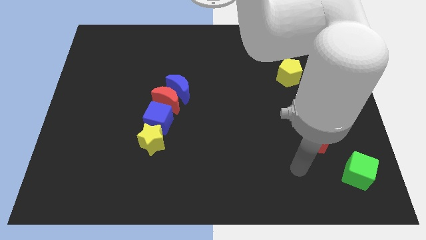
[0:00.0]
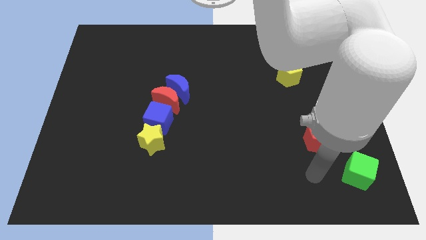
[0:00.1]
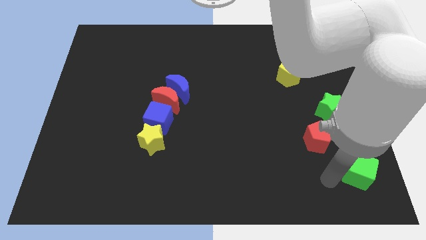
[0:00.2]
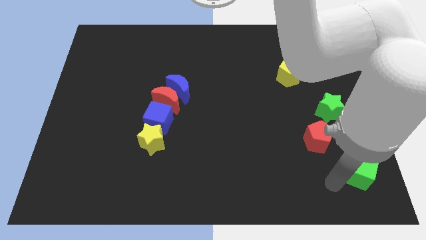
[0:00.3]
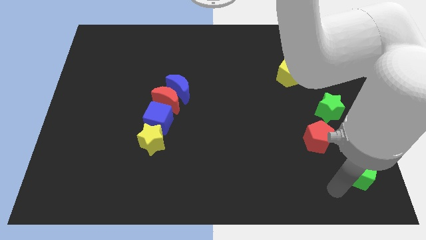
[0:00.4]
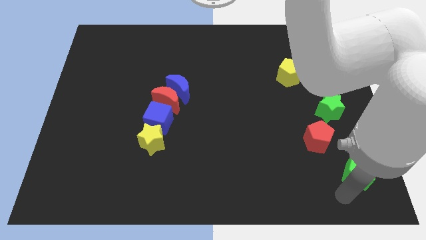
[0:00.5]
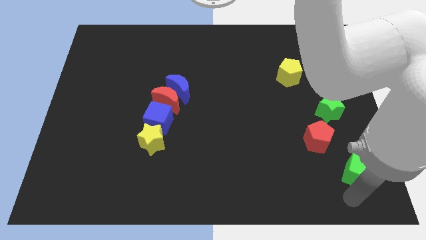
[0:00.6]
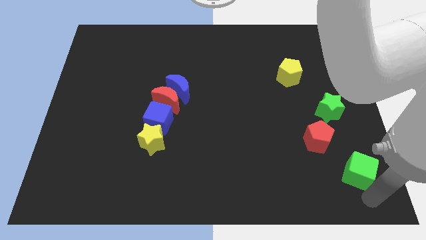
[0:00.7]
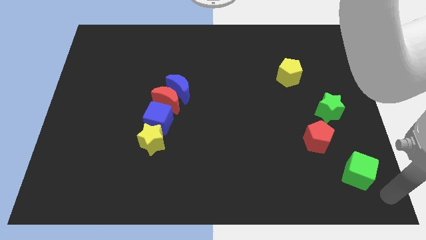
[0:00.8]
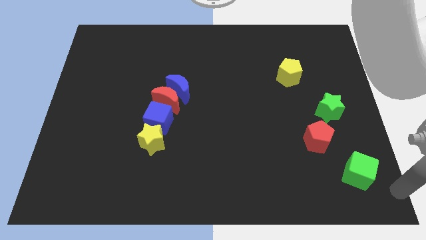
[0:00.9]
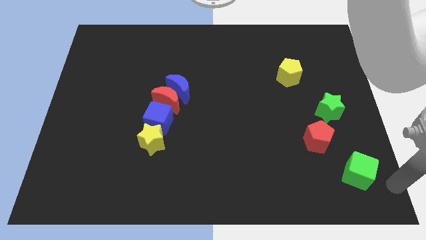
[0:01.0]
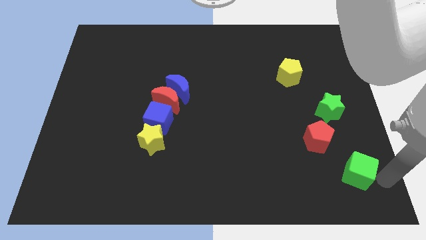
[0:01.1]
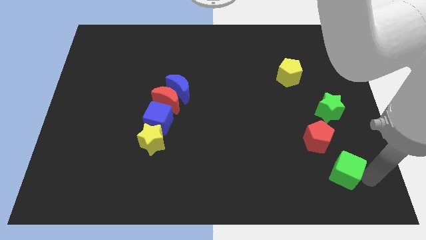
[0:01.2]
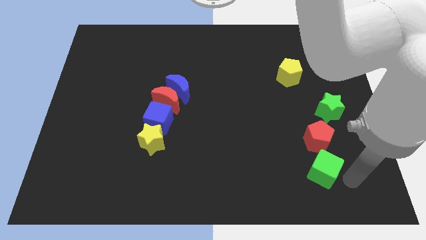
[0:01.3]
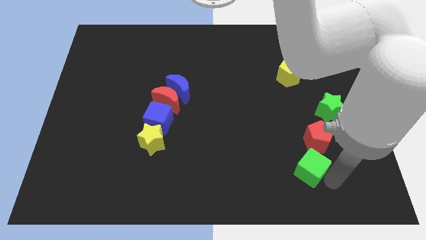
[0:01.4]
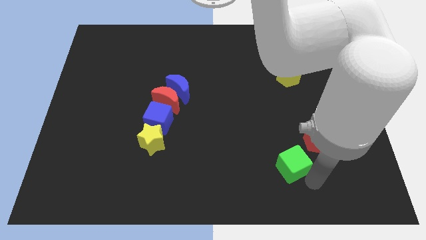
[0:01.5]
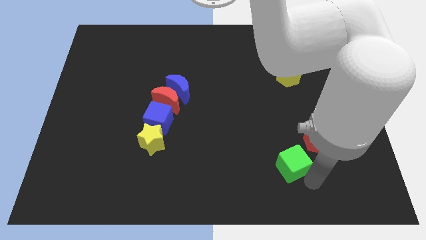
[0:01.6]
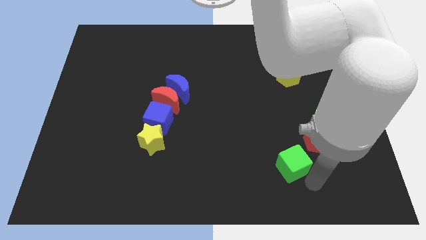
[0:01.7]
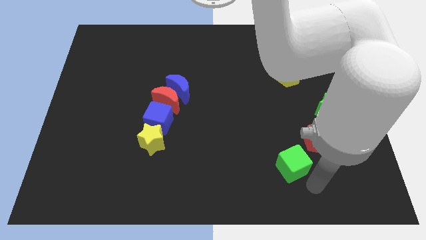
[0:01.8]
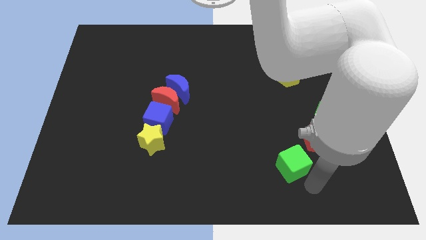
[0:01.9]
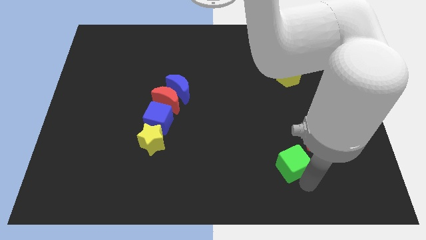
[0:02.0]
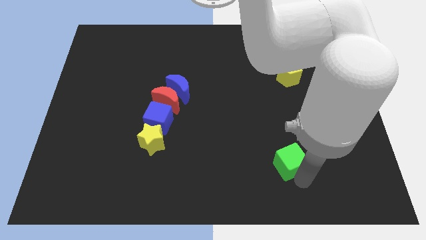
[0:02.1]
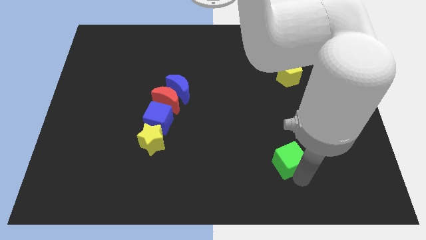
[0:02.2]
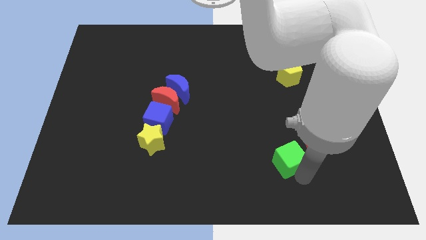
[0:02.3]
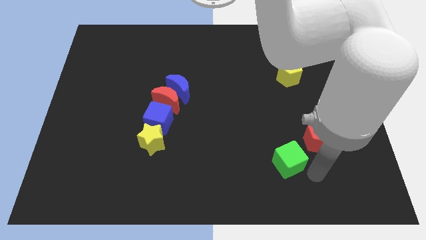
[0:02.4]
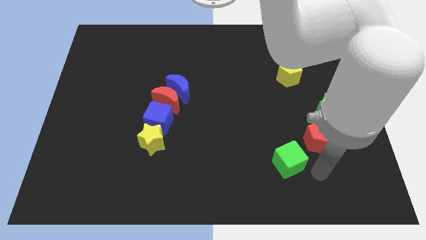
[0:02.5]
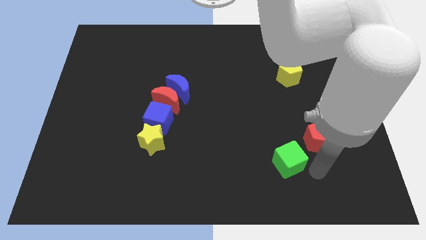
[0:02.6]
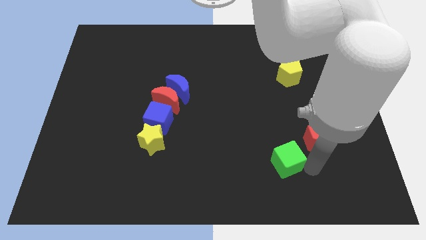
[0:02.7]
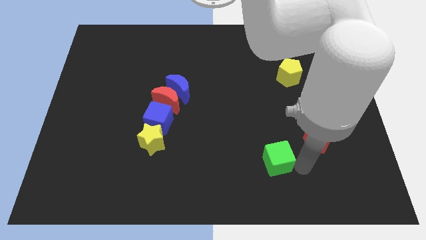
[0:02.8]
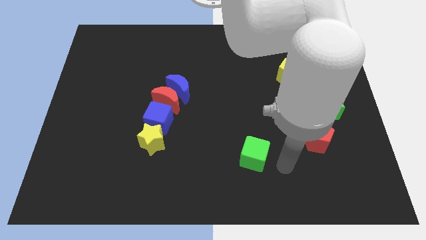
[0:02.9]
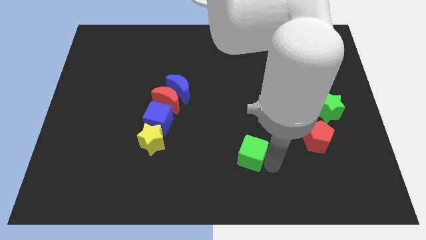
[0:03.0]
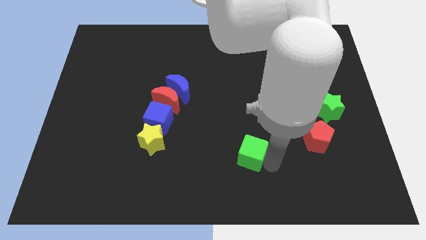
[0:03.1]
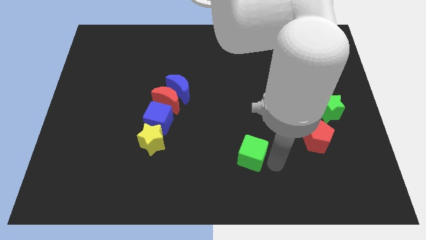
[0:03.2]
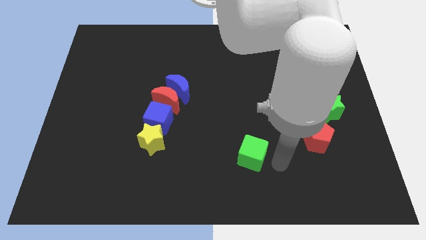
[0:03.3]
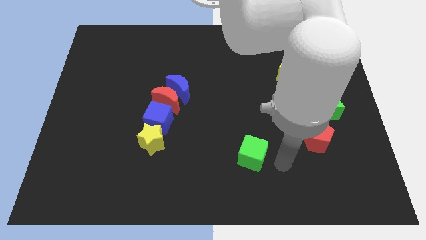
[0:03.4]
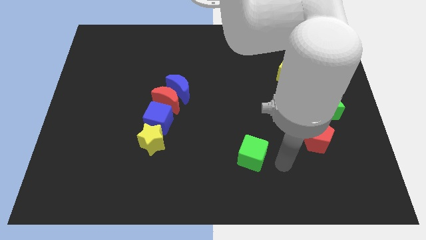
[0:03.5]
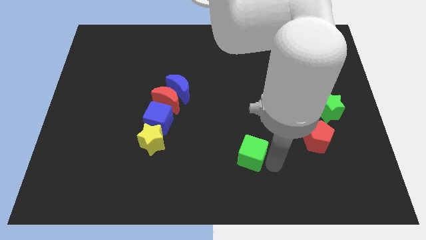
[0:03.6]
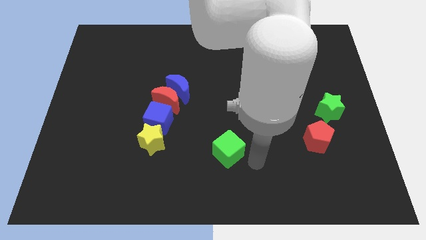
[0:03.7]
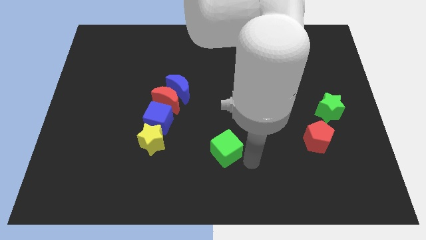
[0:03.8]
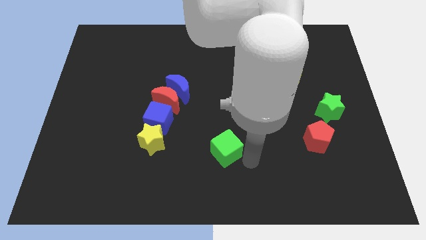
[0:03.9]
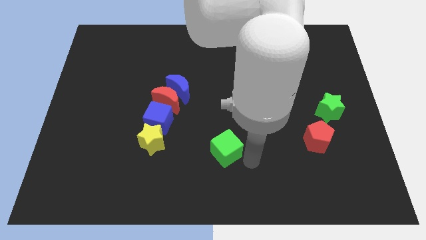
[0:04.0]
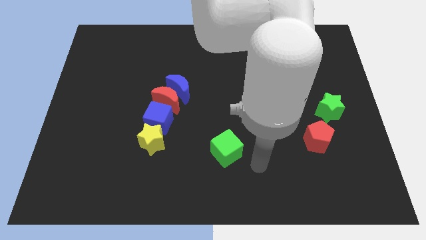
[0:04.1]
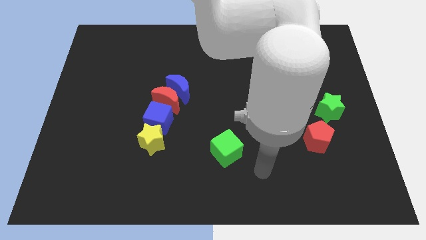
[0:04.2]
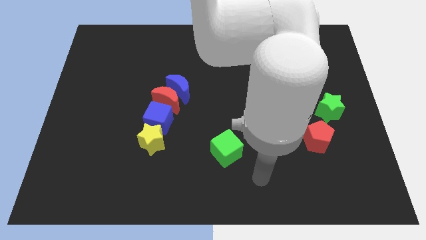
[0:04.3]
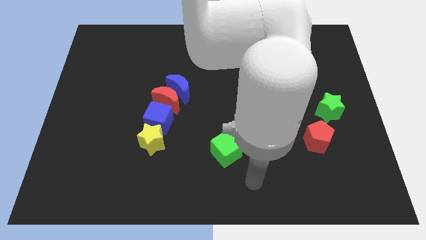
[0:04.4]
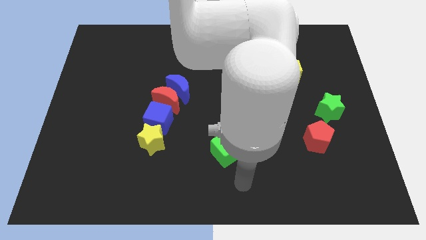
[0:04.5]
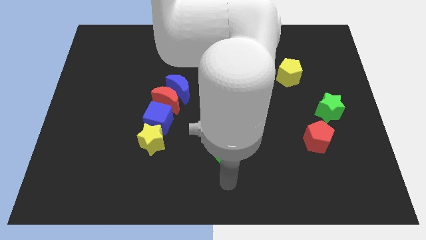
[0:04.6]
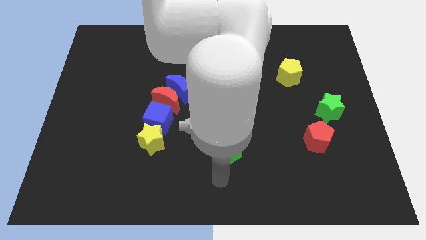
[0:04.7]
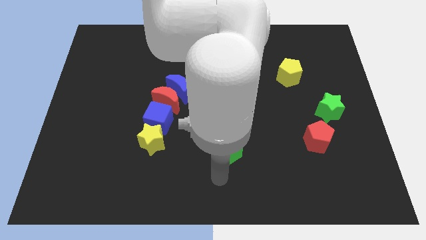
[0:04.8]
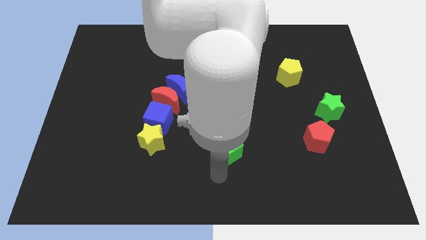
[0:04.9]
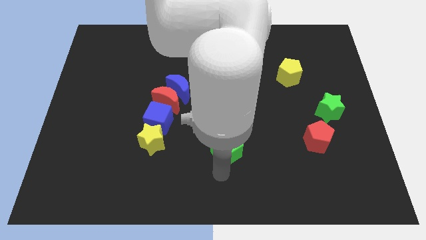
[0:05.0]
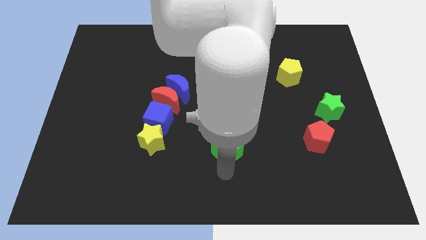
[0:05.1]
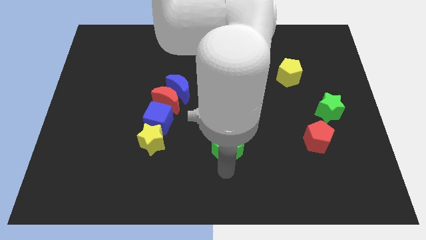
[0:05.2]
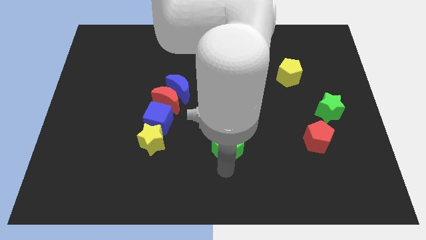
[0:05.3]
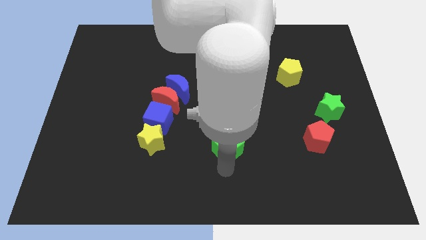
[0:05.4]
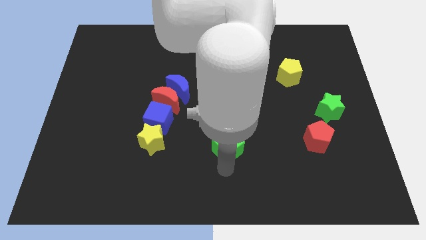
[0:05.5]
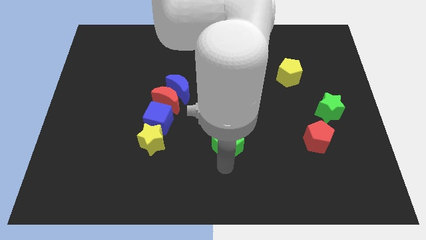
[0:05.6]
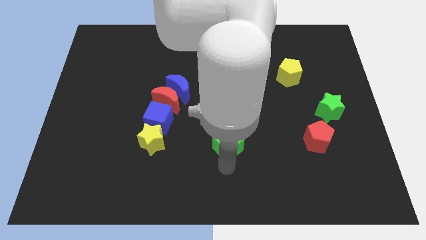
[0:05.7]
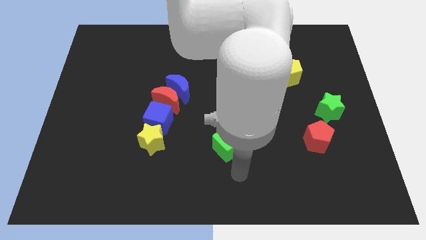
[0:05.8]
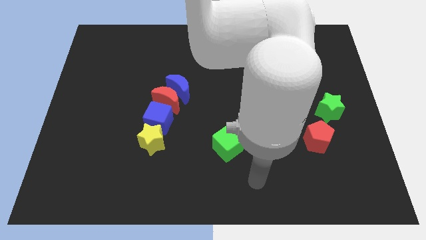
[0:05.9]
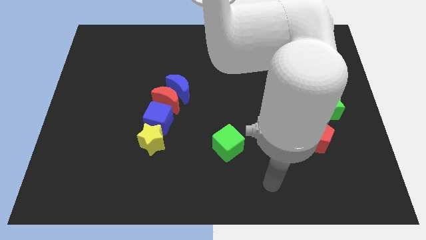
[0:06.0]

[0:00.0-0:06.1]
place the green cube in between the yellow star and the red pentagon

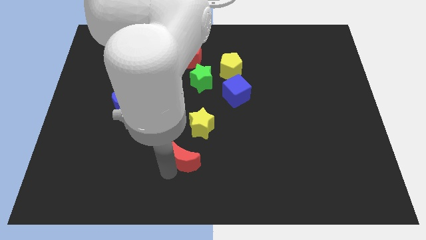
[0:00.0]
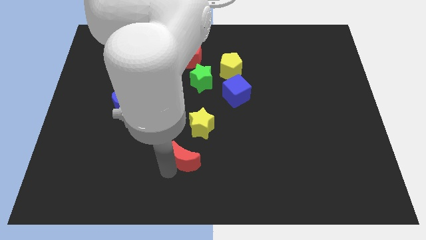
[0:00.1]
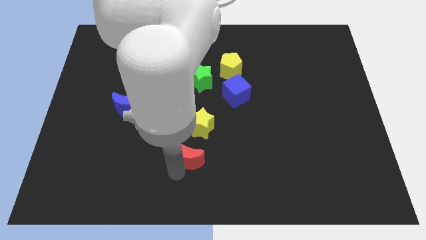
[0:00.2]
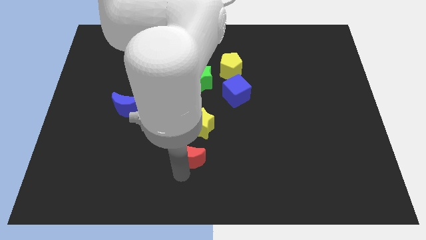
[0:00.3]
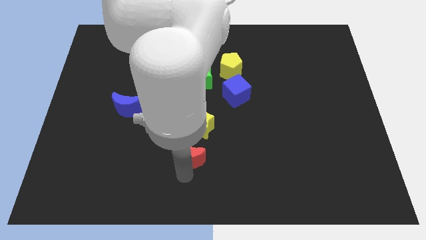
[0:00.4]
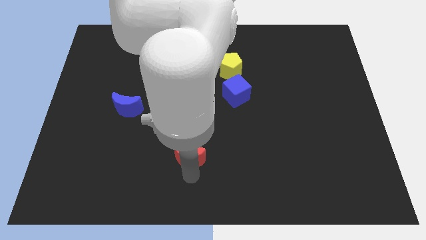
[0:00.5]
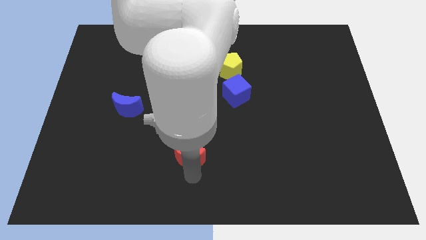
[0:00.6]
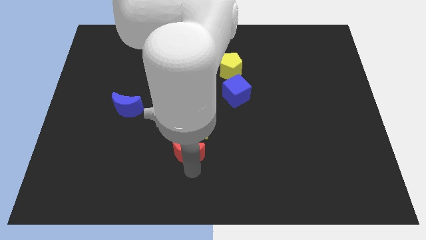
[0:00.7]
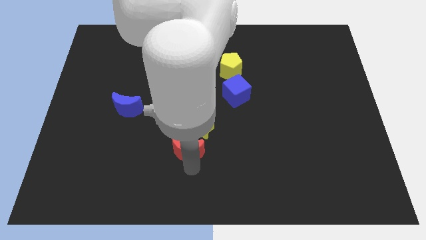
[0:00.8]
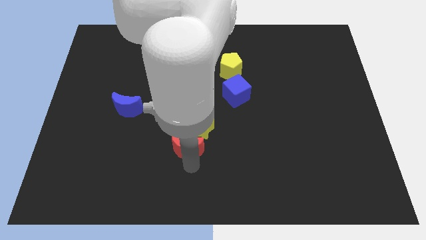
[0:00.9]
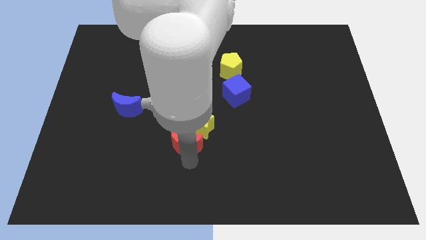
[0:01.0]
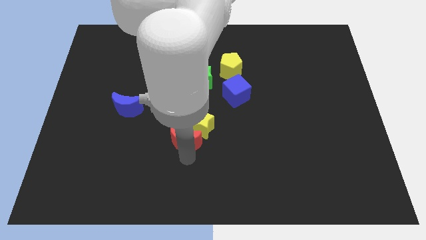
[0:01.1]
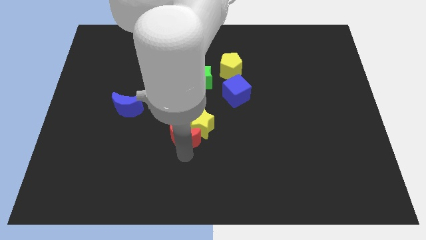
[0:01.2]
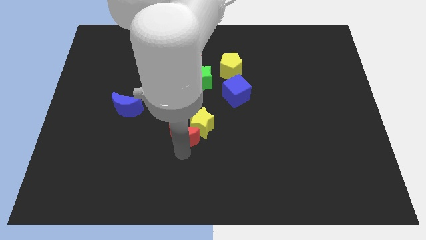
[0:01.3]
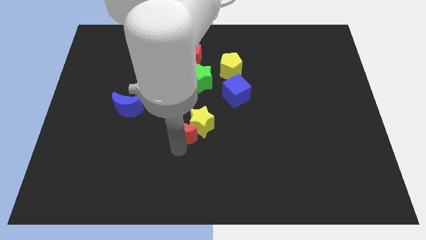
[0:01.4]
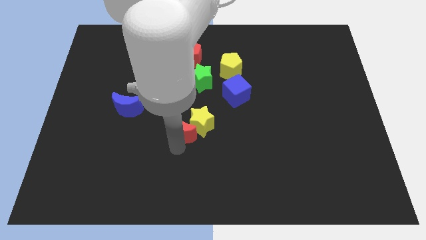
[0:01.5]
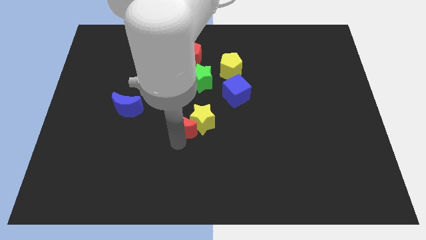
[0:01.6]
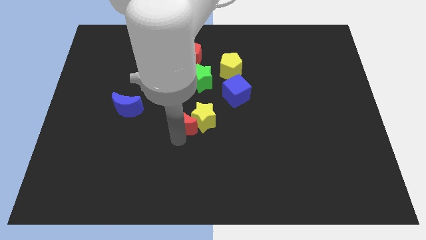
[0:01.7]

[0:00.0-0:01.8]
push the red moon into the yellow star

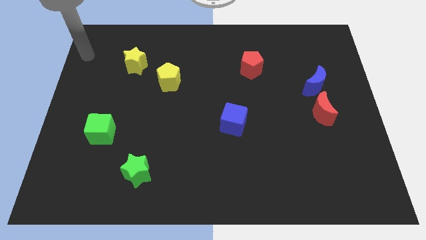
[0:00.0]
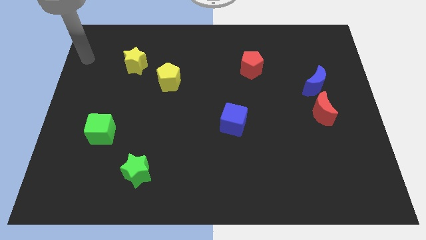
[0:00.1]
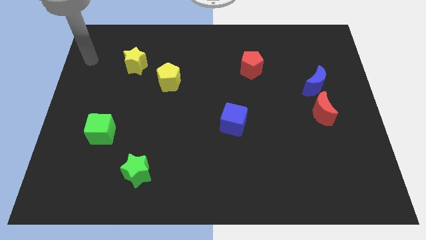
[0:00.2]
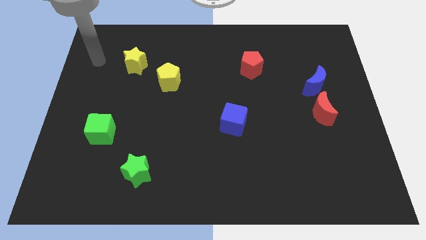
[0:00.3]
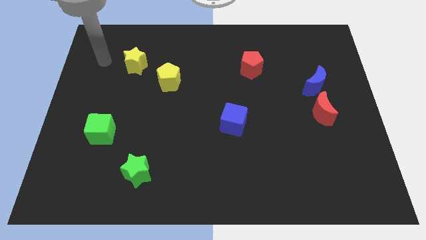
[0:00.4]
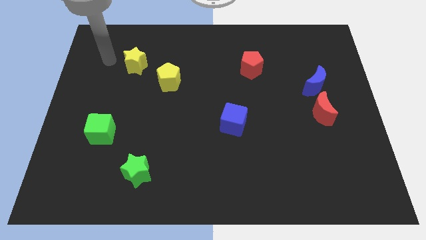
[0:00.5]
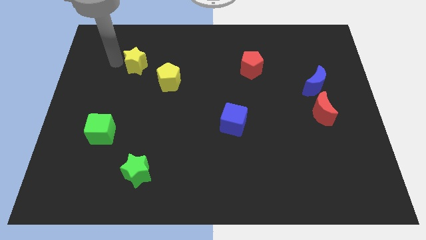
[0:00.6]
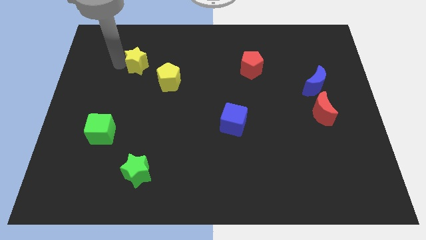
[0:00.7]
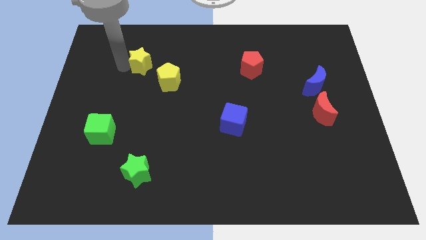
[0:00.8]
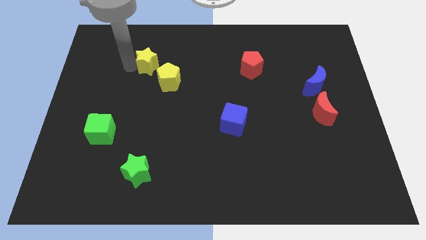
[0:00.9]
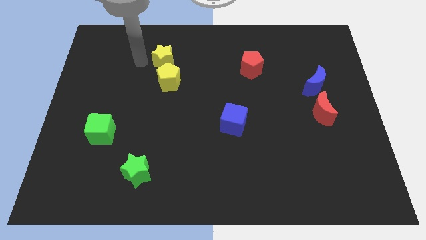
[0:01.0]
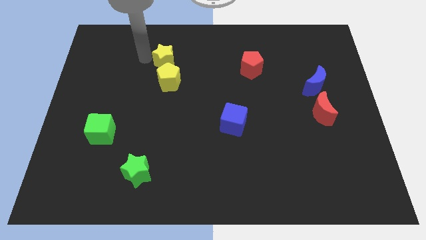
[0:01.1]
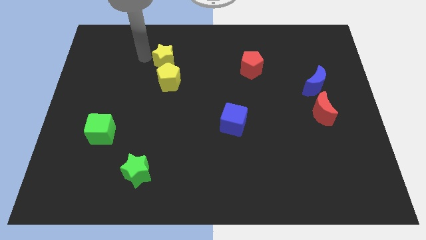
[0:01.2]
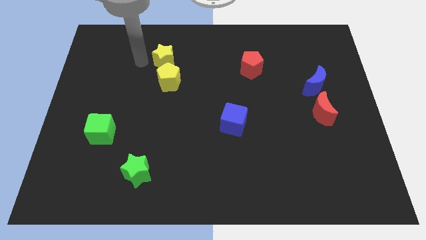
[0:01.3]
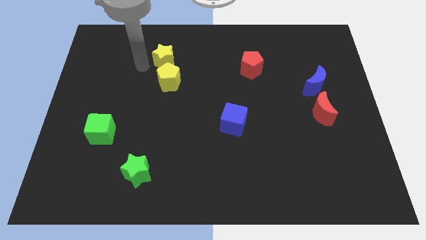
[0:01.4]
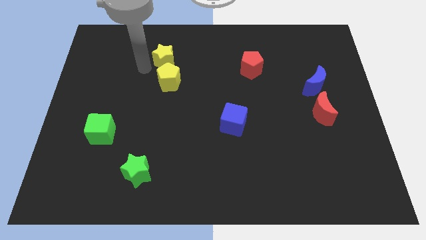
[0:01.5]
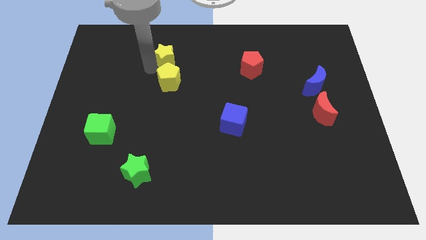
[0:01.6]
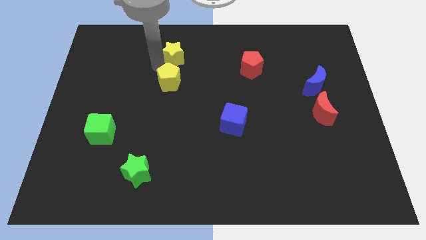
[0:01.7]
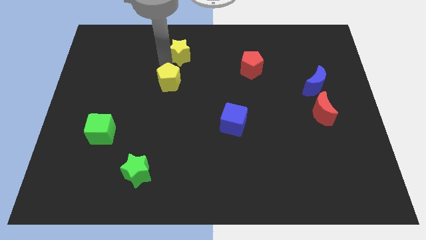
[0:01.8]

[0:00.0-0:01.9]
place the yellow star above the yellow pentagon
